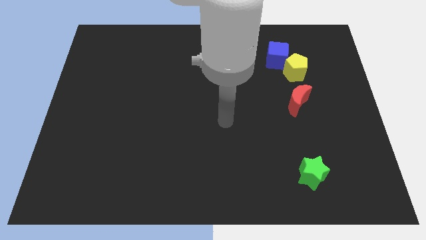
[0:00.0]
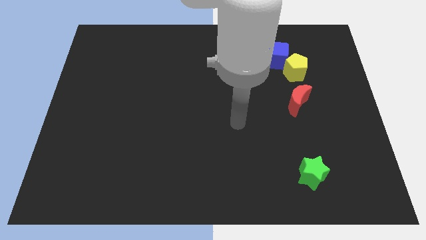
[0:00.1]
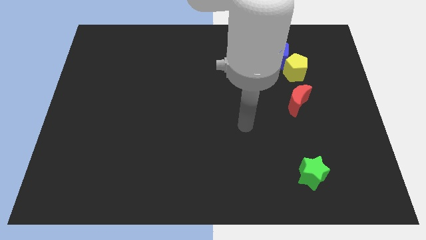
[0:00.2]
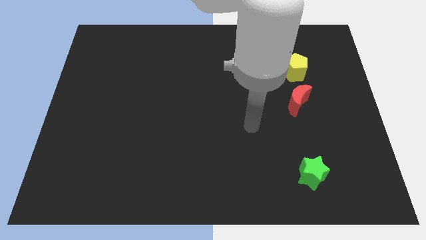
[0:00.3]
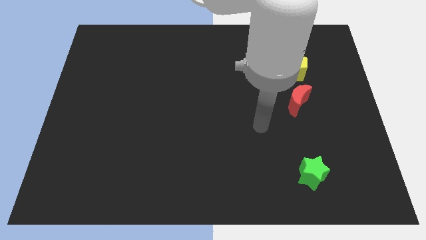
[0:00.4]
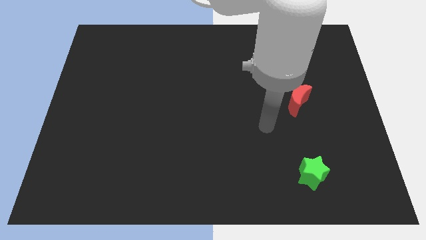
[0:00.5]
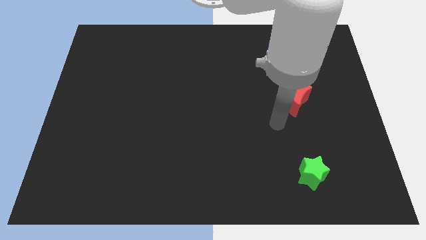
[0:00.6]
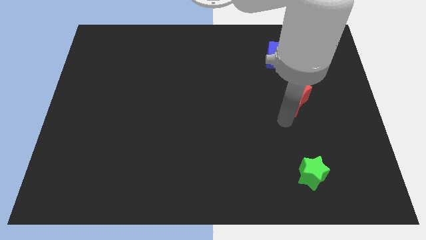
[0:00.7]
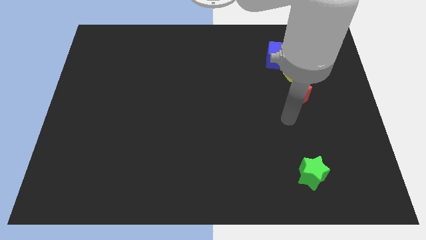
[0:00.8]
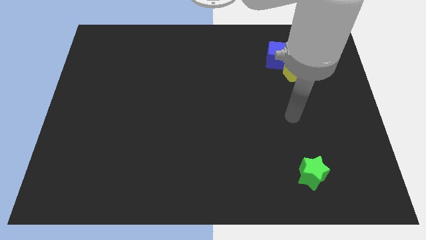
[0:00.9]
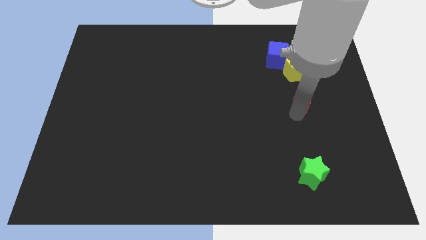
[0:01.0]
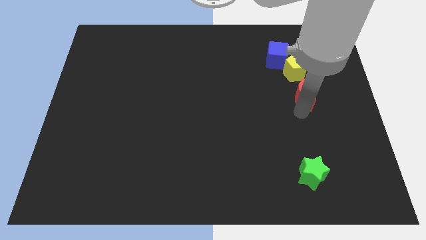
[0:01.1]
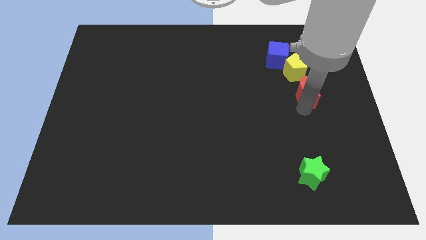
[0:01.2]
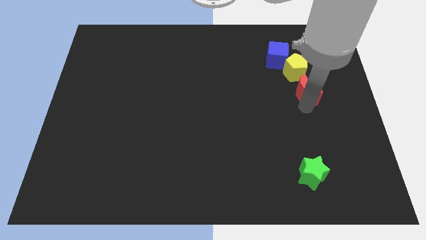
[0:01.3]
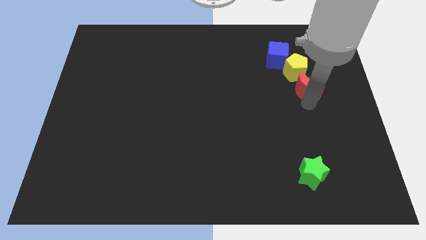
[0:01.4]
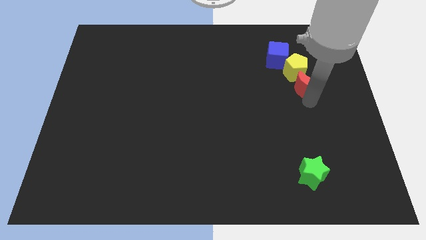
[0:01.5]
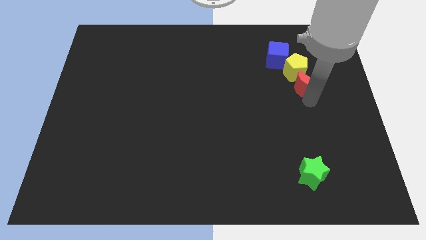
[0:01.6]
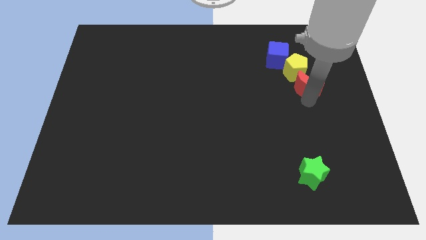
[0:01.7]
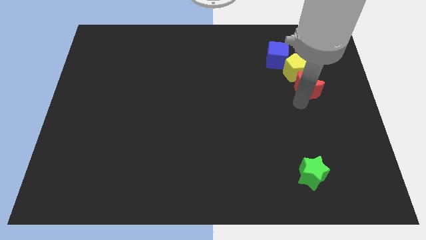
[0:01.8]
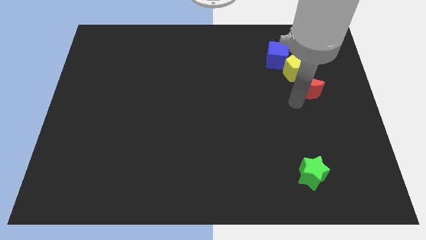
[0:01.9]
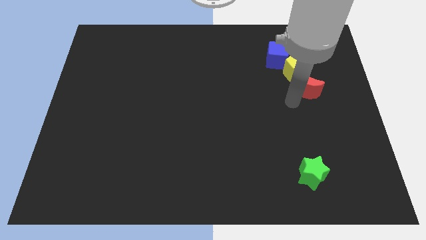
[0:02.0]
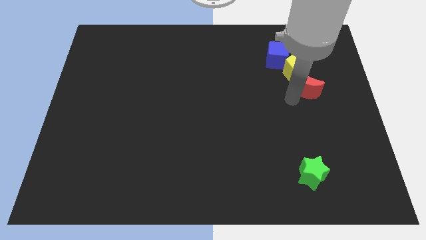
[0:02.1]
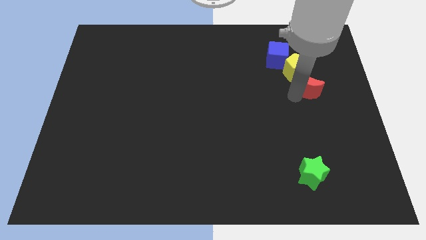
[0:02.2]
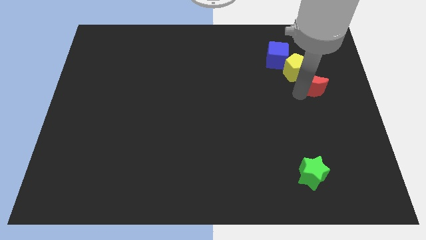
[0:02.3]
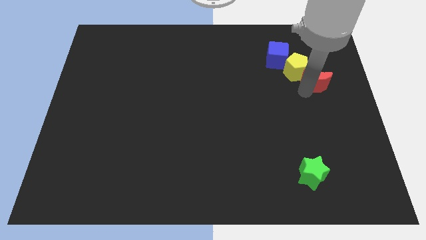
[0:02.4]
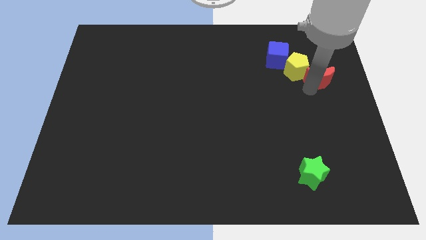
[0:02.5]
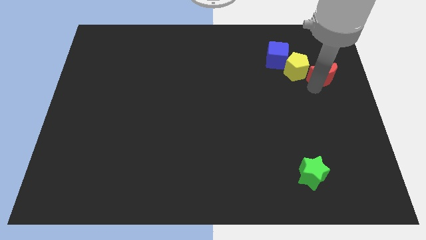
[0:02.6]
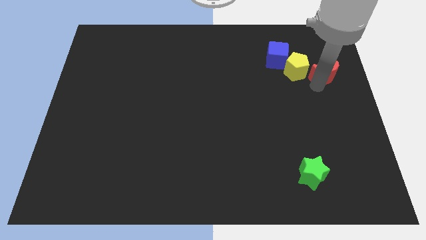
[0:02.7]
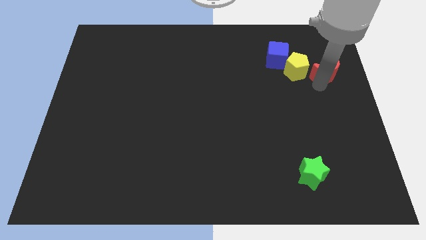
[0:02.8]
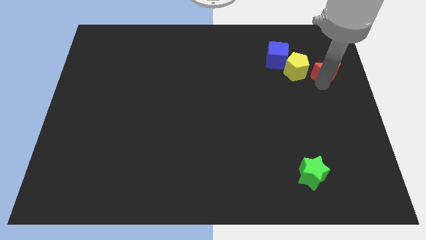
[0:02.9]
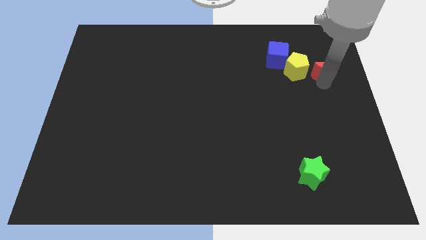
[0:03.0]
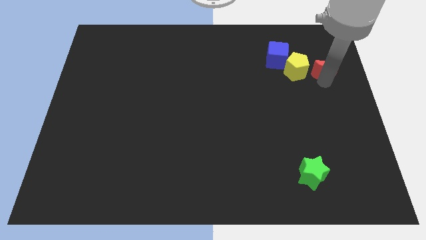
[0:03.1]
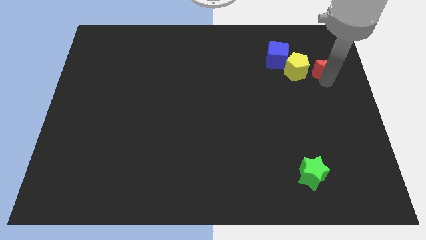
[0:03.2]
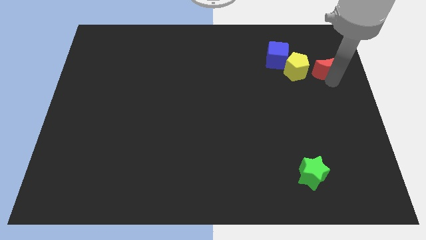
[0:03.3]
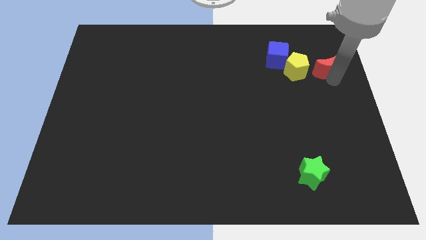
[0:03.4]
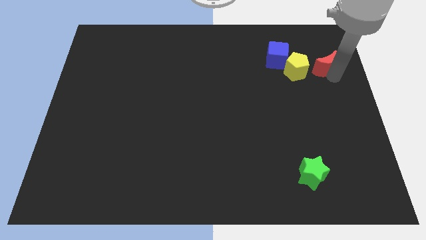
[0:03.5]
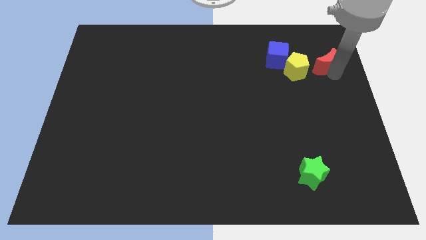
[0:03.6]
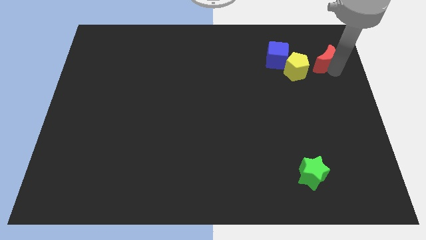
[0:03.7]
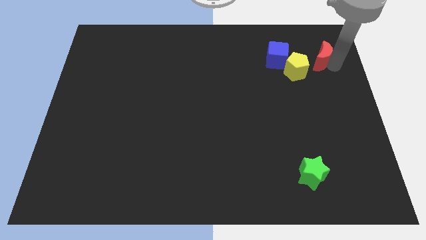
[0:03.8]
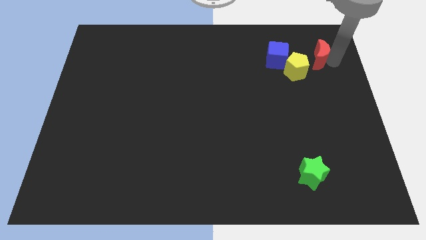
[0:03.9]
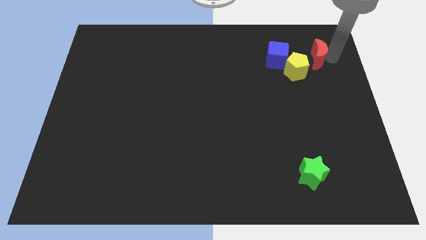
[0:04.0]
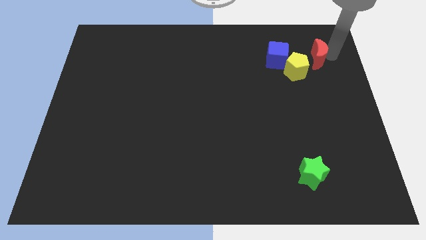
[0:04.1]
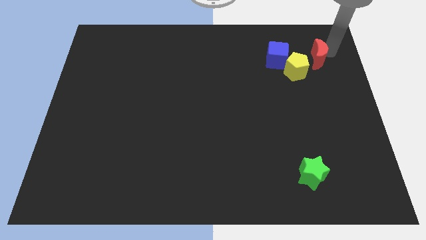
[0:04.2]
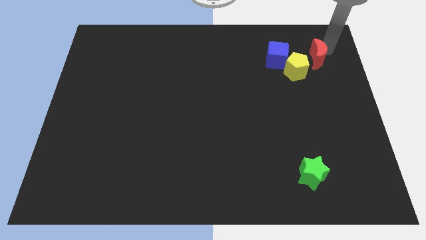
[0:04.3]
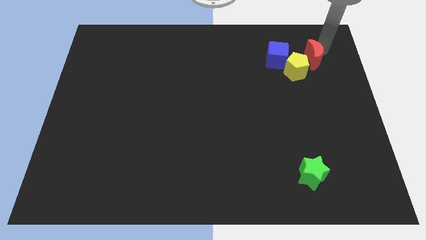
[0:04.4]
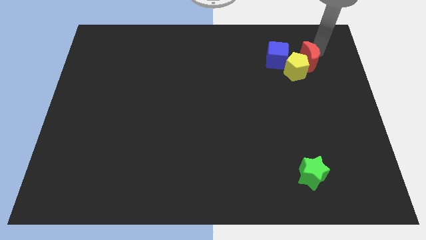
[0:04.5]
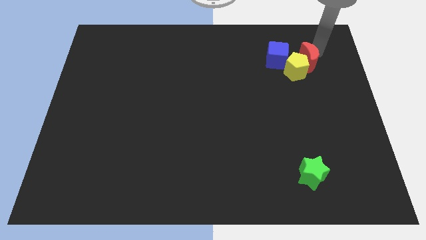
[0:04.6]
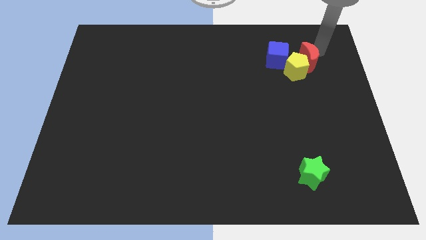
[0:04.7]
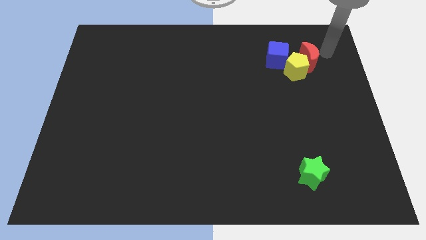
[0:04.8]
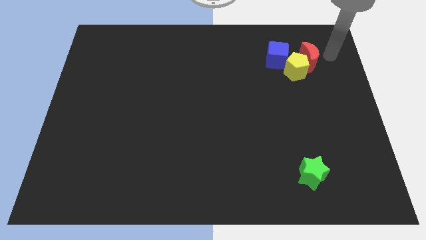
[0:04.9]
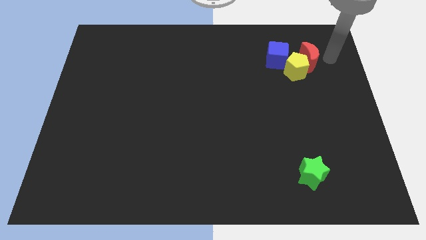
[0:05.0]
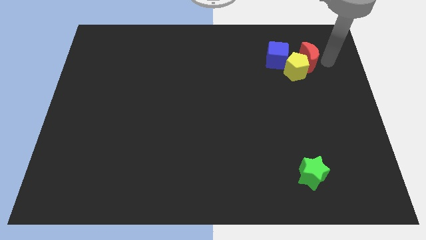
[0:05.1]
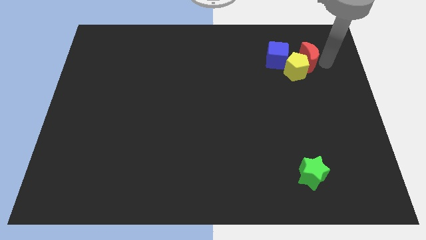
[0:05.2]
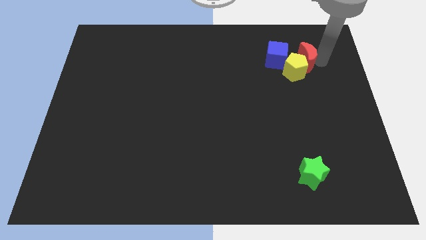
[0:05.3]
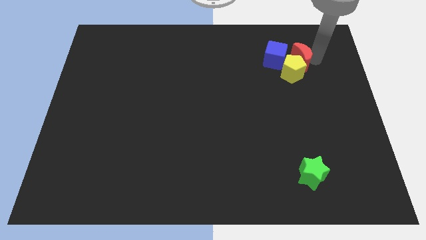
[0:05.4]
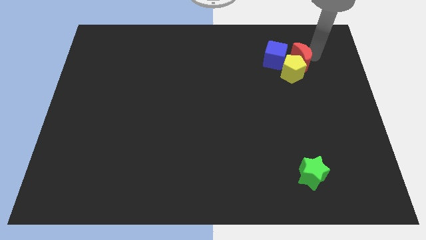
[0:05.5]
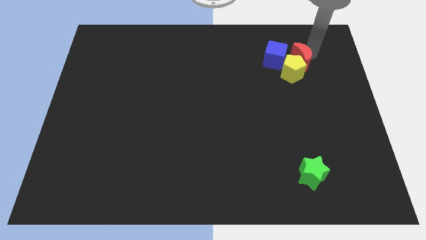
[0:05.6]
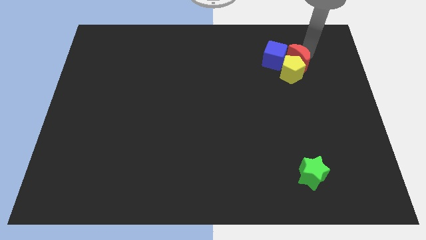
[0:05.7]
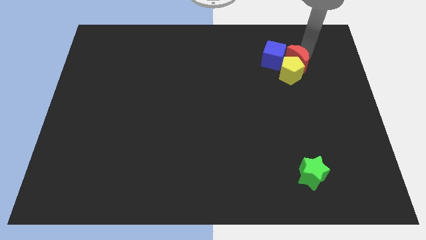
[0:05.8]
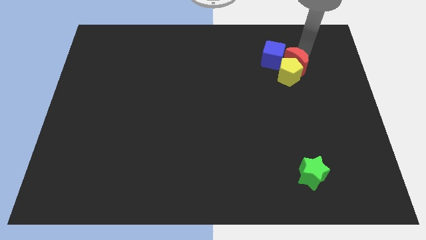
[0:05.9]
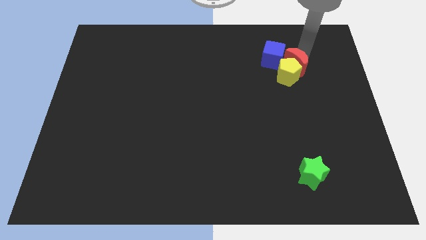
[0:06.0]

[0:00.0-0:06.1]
move the red block close to the blue block

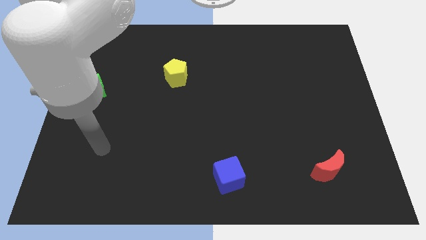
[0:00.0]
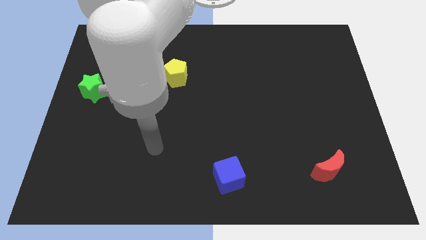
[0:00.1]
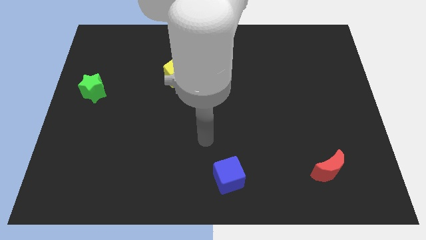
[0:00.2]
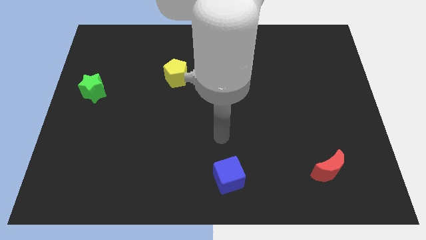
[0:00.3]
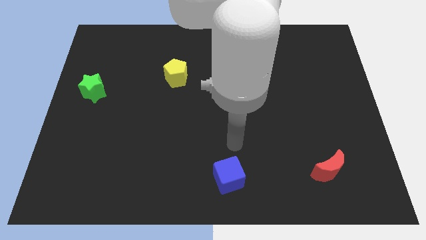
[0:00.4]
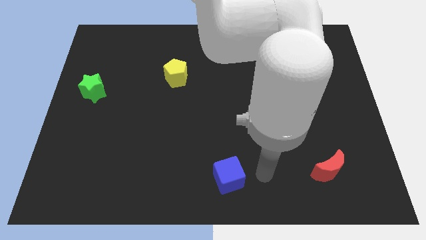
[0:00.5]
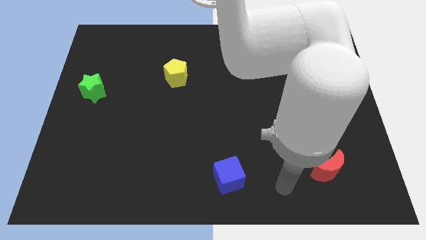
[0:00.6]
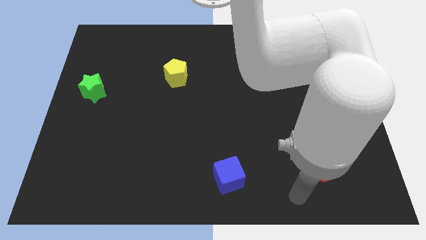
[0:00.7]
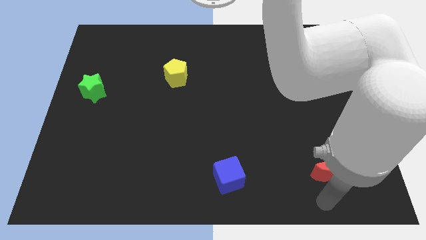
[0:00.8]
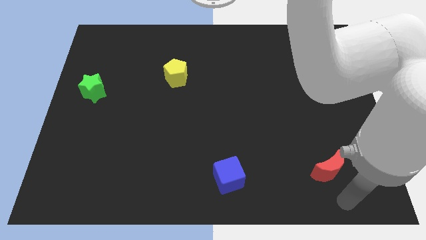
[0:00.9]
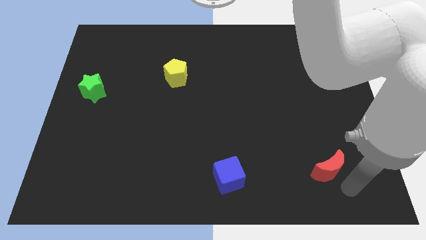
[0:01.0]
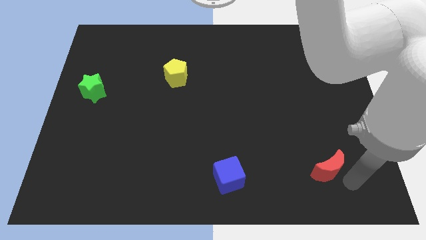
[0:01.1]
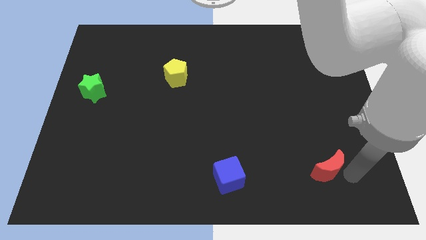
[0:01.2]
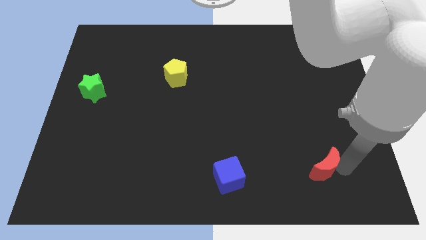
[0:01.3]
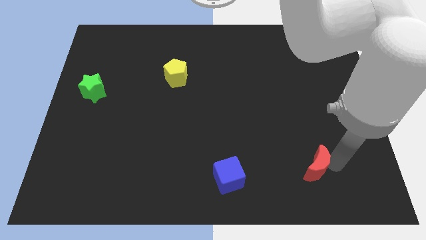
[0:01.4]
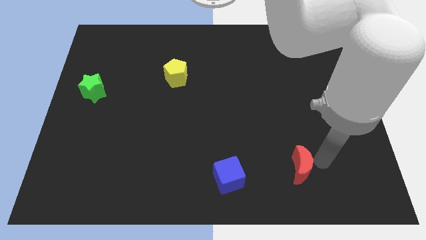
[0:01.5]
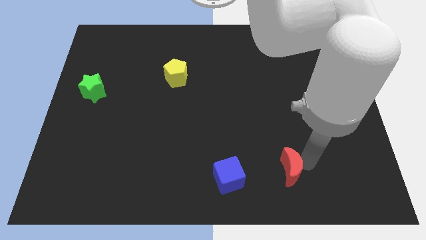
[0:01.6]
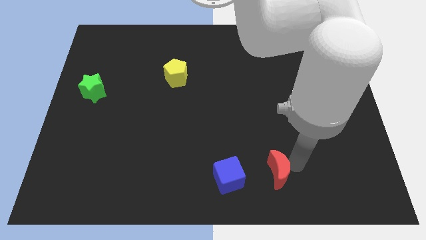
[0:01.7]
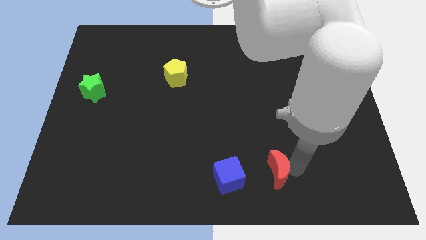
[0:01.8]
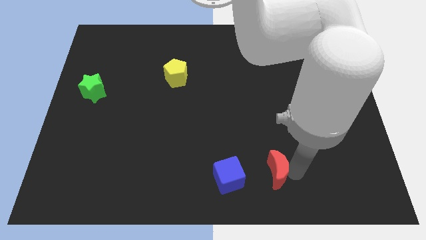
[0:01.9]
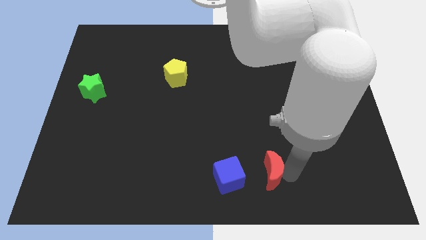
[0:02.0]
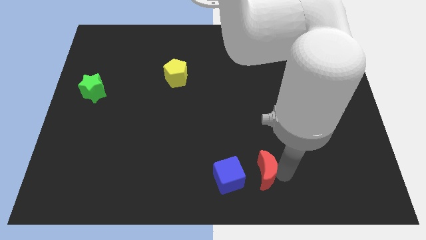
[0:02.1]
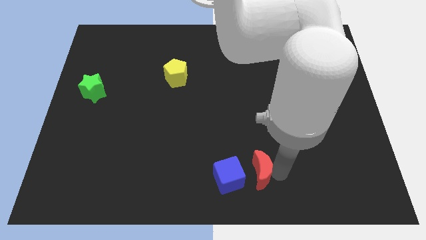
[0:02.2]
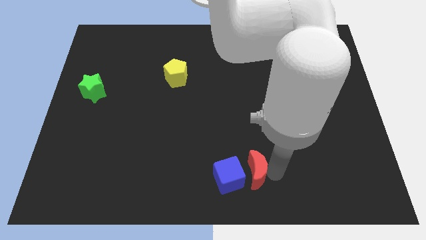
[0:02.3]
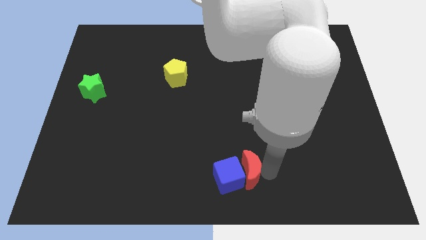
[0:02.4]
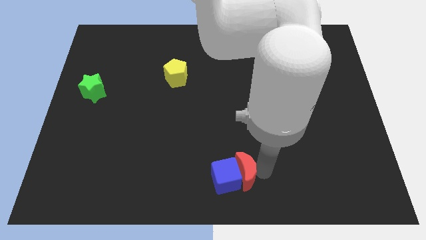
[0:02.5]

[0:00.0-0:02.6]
move the moon close to the blue cube
